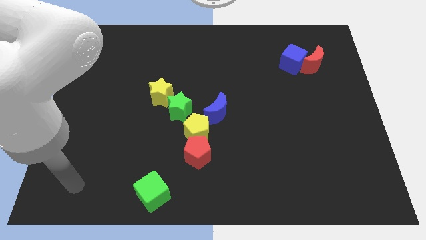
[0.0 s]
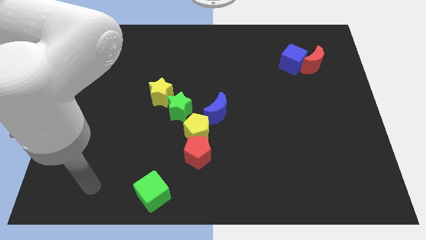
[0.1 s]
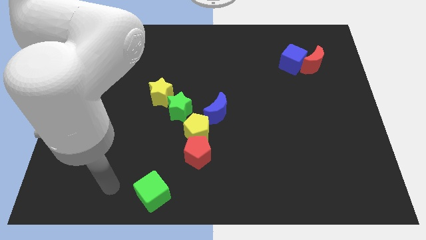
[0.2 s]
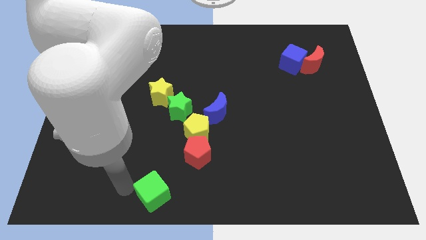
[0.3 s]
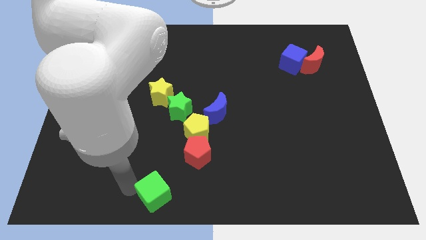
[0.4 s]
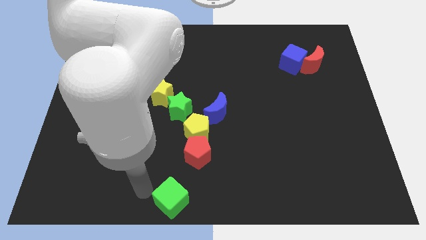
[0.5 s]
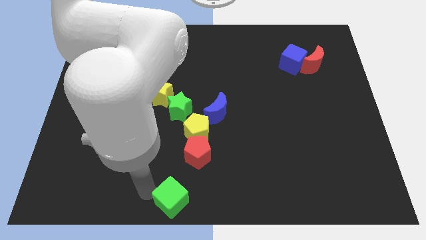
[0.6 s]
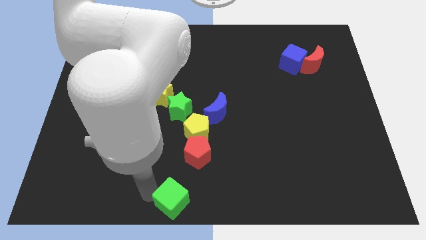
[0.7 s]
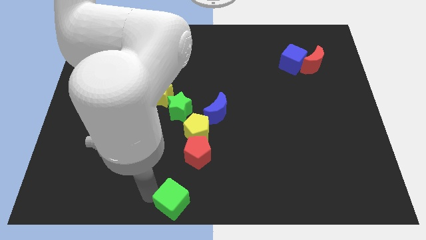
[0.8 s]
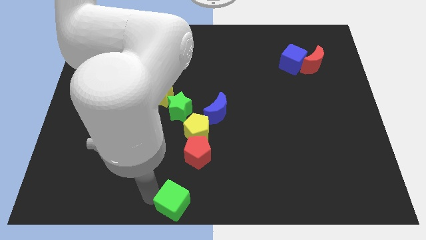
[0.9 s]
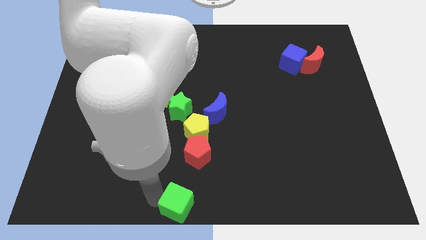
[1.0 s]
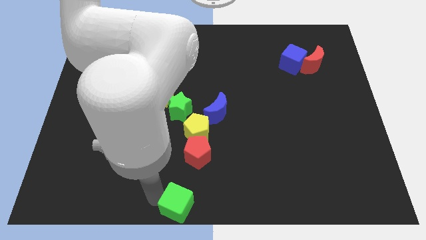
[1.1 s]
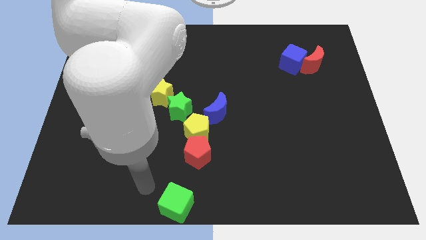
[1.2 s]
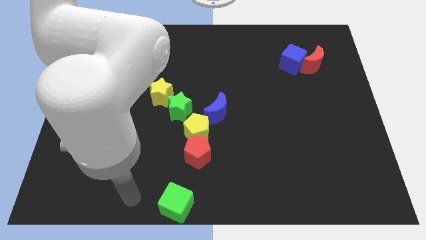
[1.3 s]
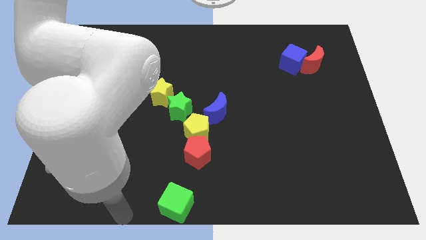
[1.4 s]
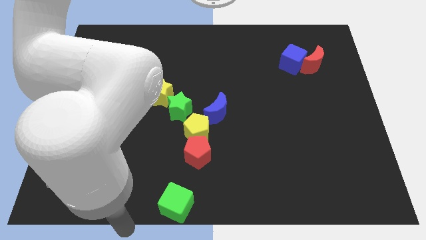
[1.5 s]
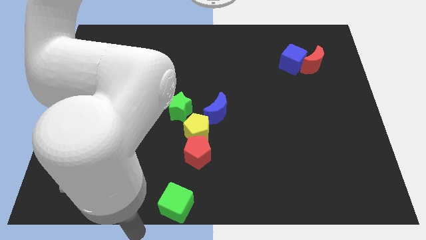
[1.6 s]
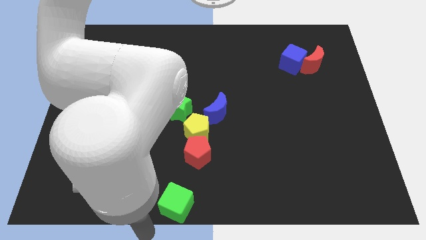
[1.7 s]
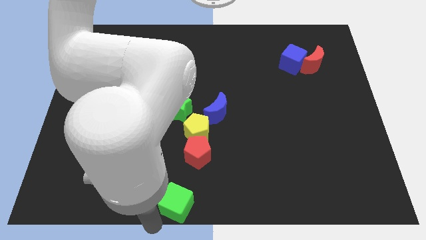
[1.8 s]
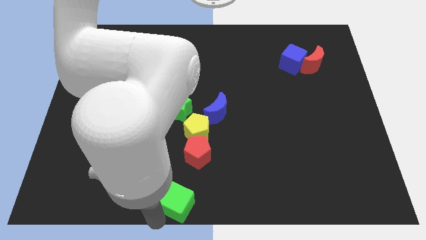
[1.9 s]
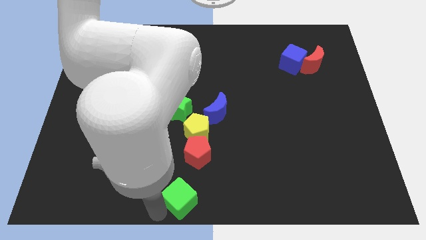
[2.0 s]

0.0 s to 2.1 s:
move green cube towards bottom center

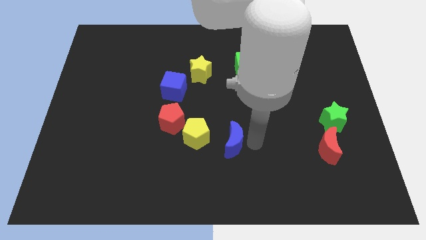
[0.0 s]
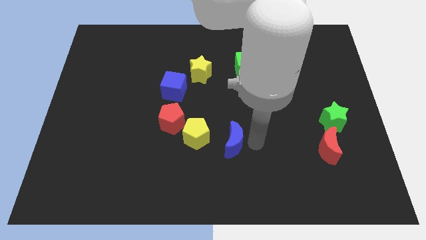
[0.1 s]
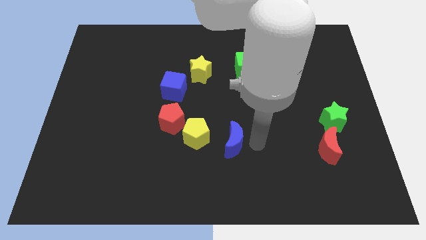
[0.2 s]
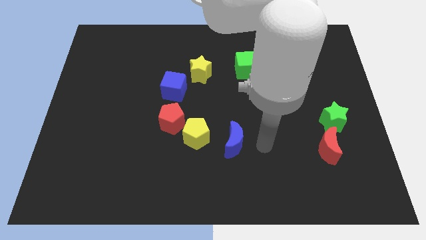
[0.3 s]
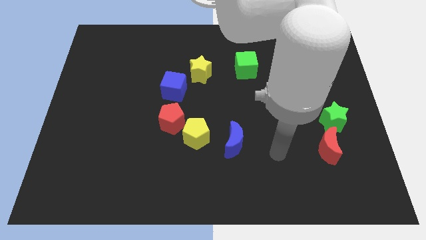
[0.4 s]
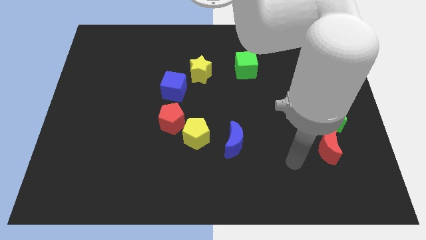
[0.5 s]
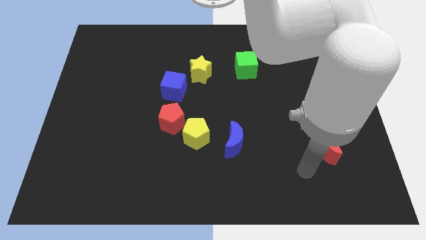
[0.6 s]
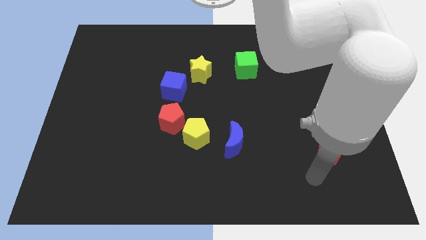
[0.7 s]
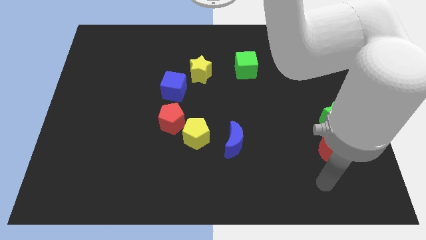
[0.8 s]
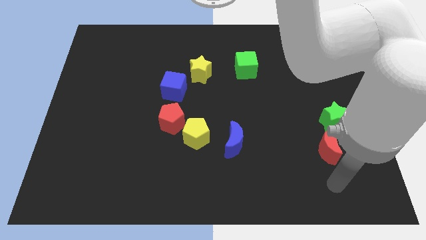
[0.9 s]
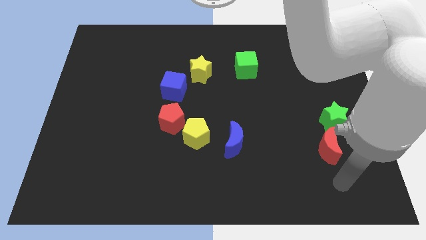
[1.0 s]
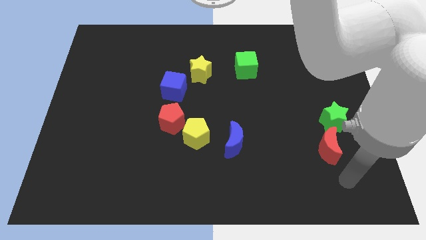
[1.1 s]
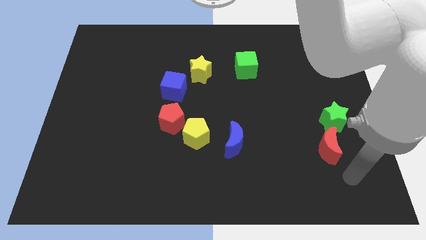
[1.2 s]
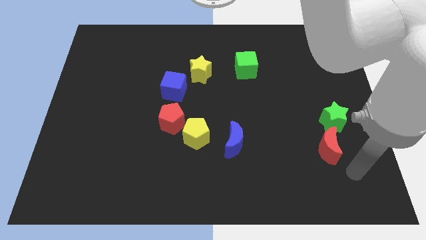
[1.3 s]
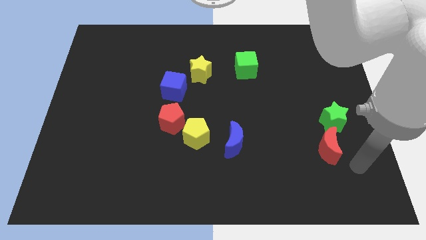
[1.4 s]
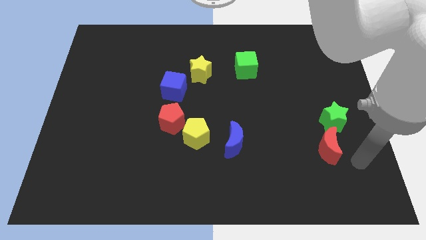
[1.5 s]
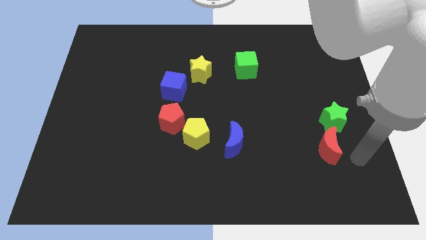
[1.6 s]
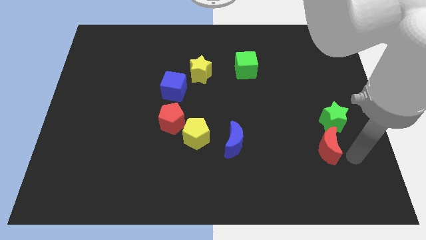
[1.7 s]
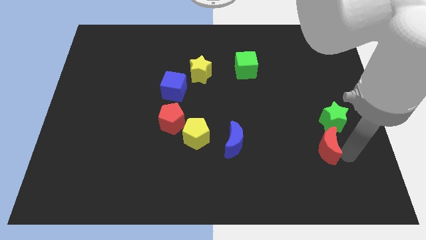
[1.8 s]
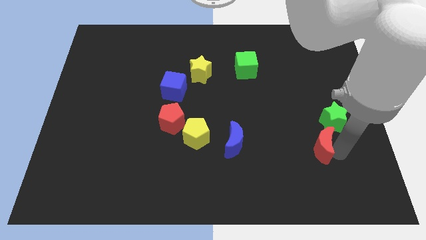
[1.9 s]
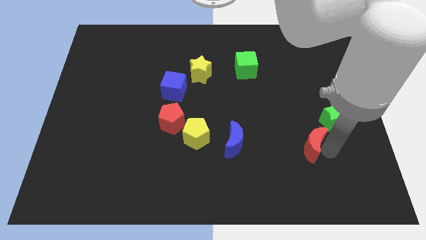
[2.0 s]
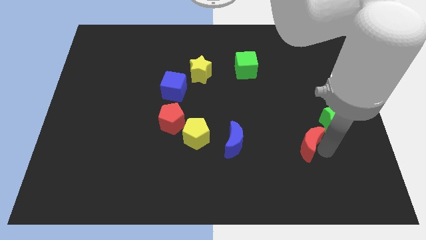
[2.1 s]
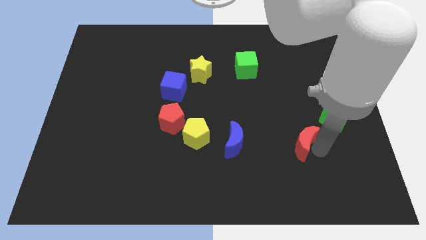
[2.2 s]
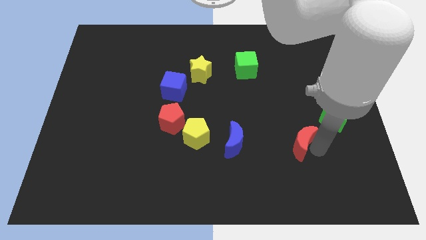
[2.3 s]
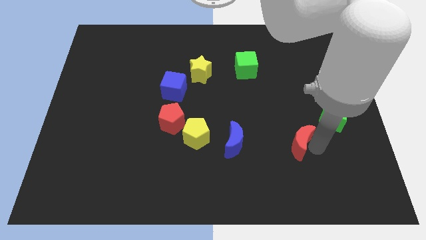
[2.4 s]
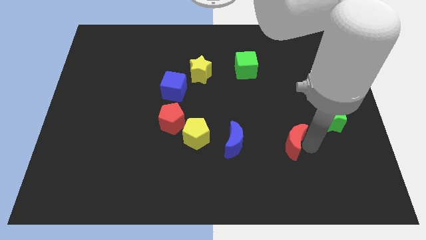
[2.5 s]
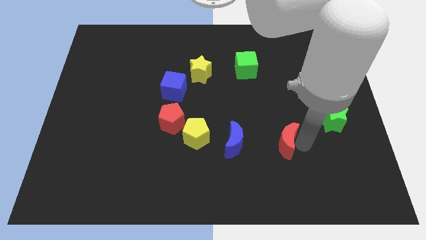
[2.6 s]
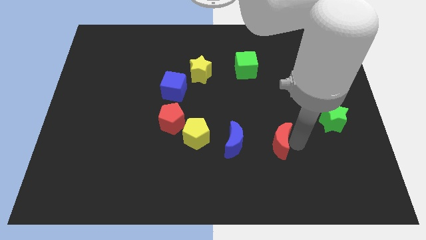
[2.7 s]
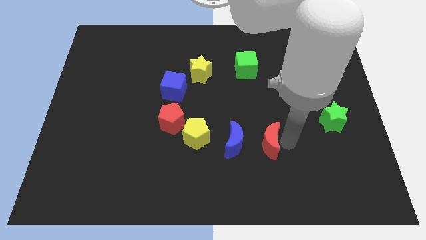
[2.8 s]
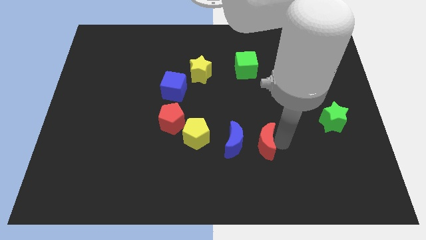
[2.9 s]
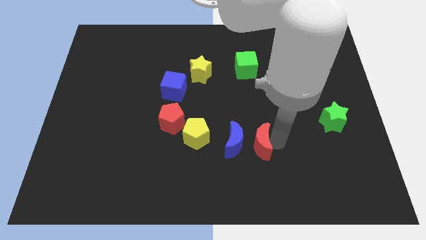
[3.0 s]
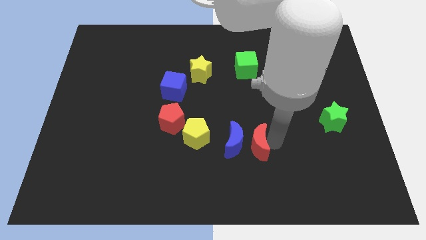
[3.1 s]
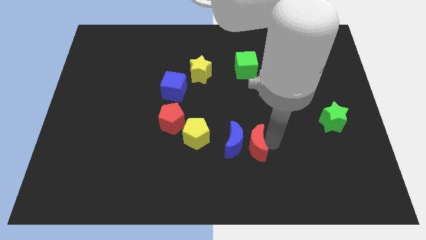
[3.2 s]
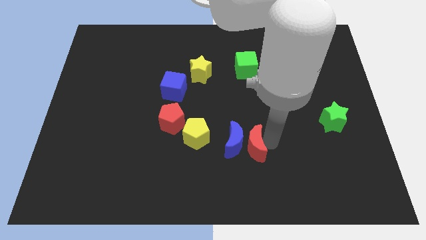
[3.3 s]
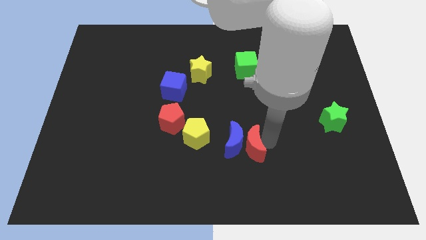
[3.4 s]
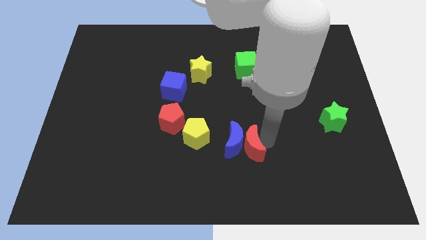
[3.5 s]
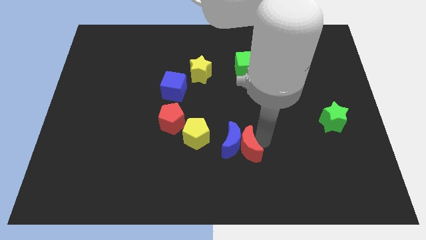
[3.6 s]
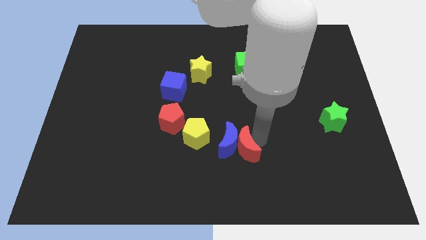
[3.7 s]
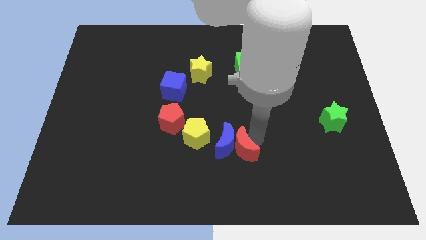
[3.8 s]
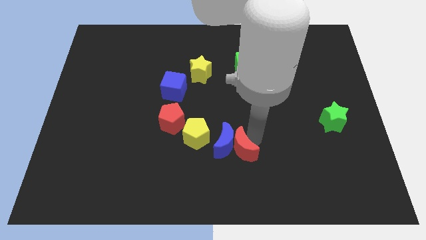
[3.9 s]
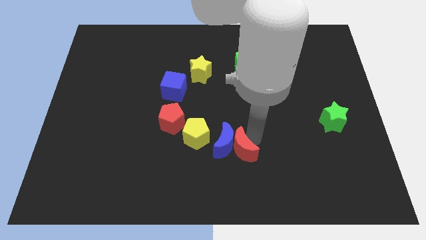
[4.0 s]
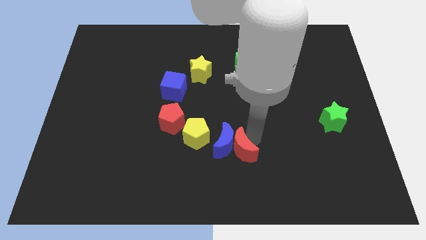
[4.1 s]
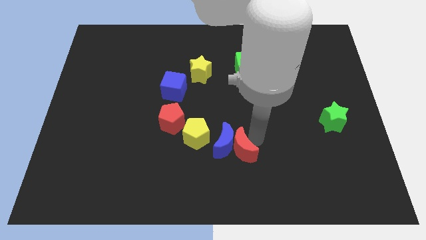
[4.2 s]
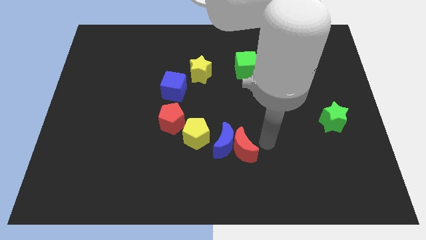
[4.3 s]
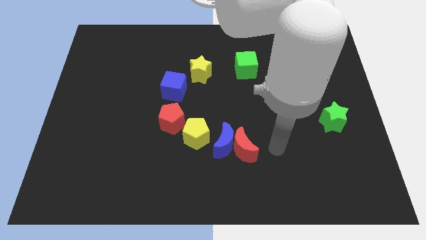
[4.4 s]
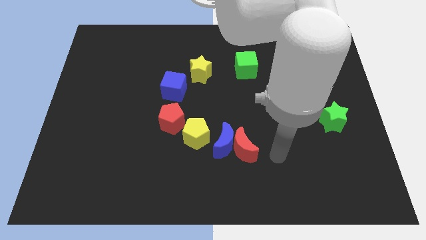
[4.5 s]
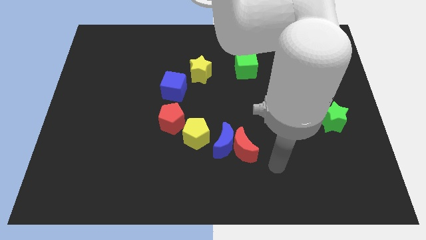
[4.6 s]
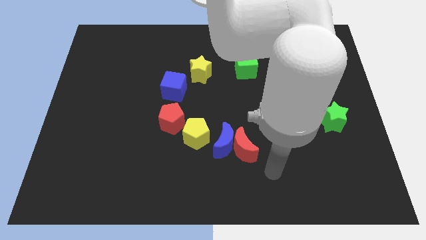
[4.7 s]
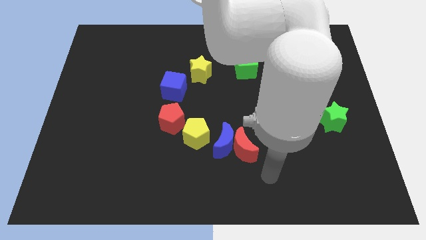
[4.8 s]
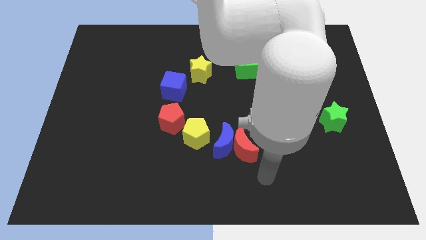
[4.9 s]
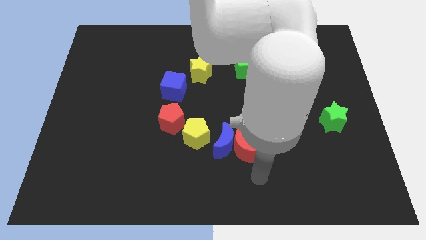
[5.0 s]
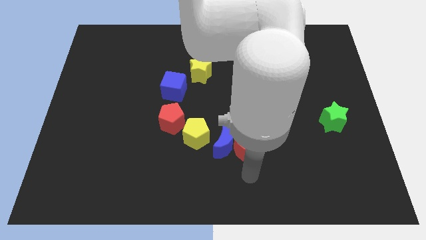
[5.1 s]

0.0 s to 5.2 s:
move the red moon close to the blue moon

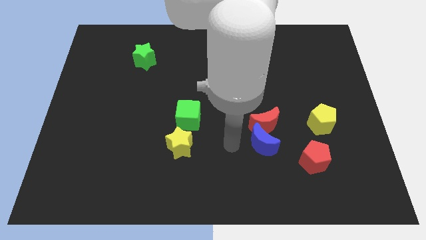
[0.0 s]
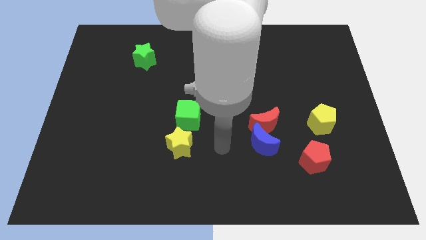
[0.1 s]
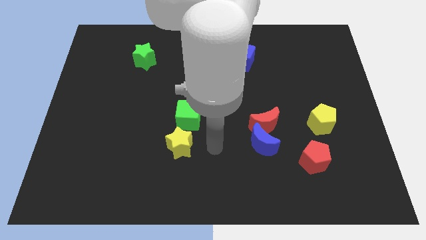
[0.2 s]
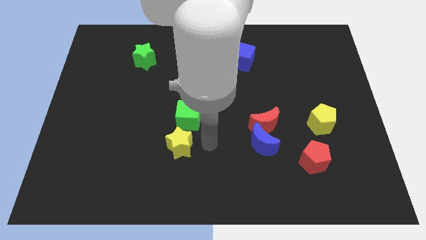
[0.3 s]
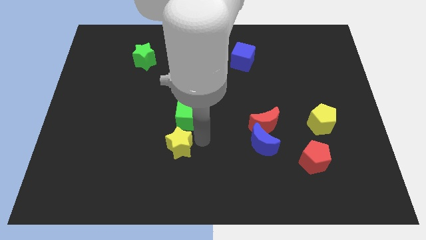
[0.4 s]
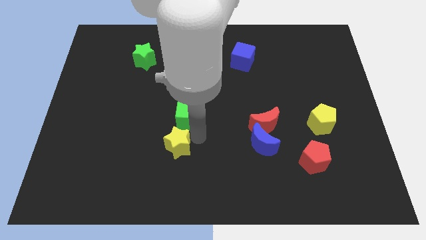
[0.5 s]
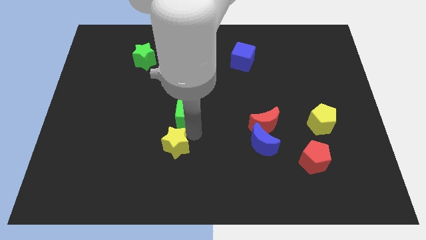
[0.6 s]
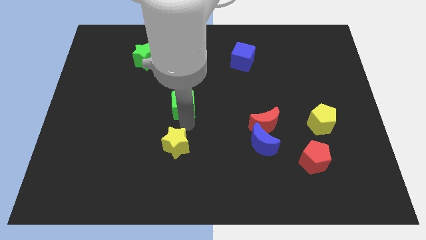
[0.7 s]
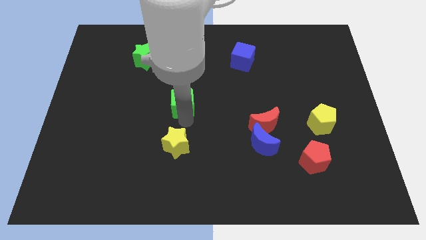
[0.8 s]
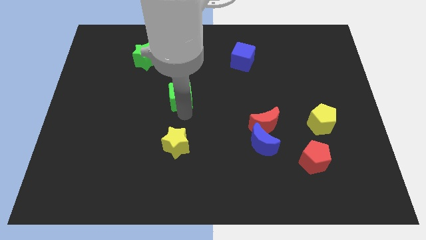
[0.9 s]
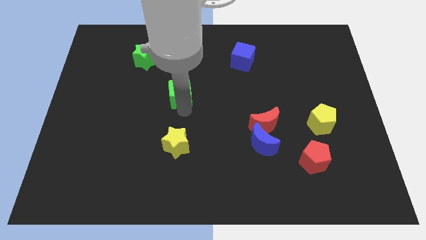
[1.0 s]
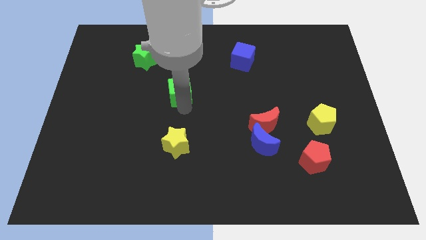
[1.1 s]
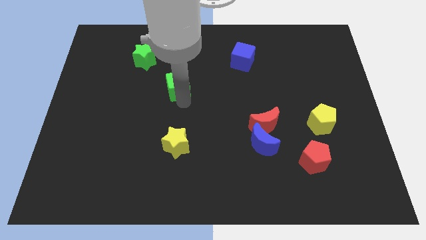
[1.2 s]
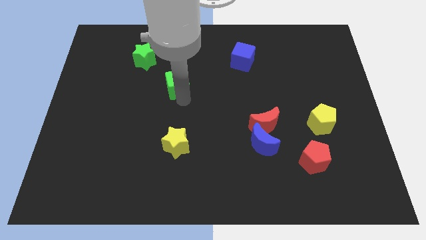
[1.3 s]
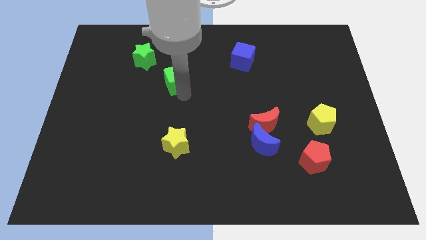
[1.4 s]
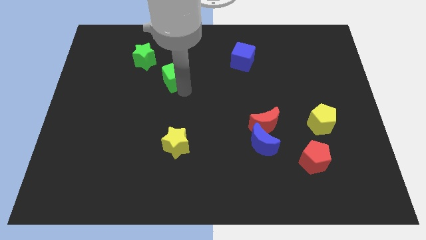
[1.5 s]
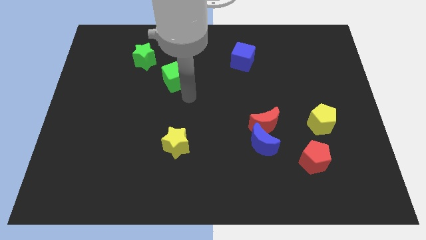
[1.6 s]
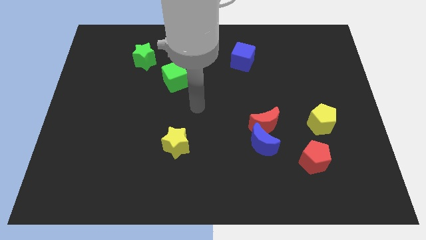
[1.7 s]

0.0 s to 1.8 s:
push the green cube towards the green star
